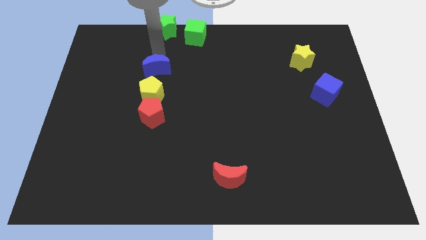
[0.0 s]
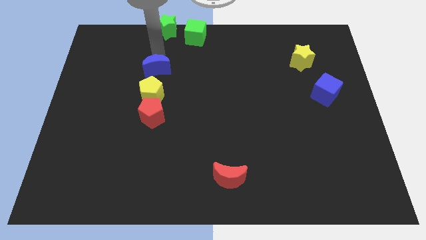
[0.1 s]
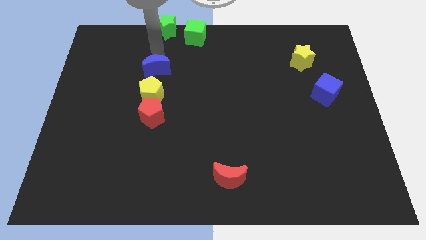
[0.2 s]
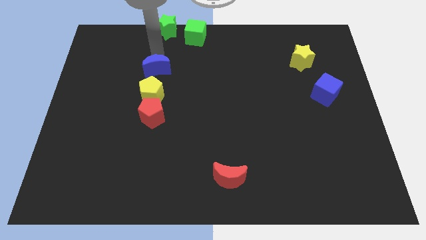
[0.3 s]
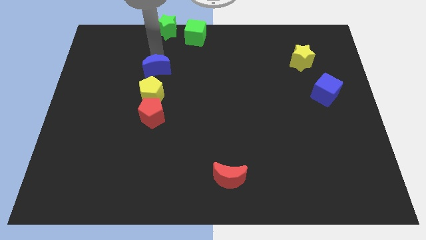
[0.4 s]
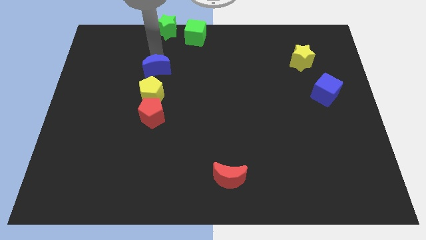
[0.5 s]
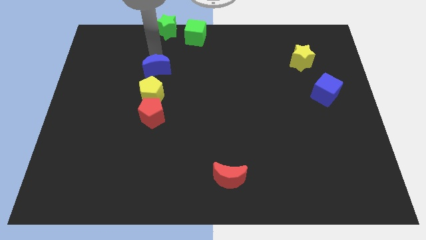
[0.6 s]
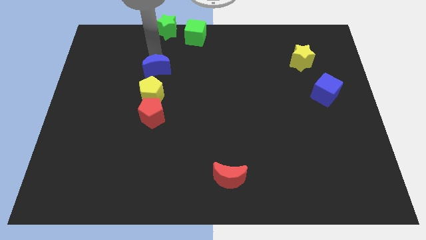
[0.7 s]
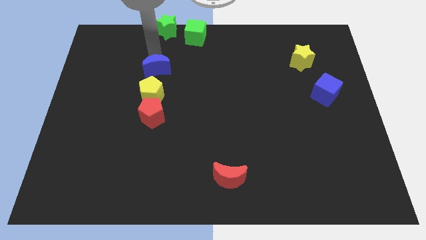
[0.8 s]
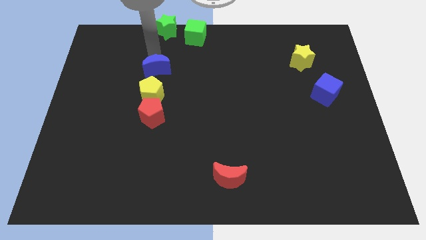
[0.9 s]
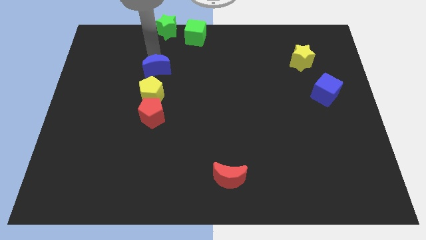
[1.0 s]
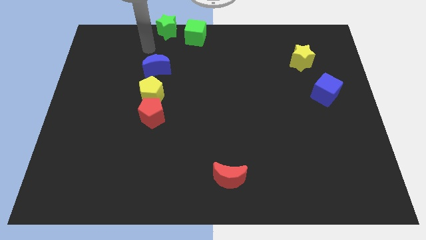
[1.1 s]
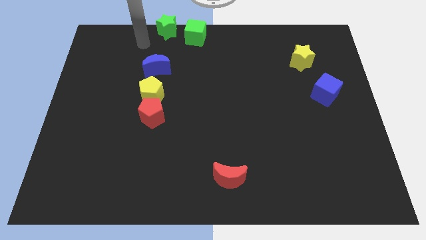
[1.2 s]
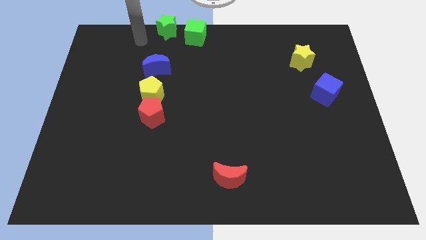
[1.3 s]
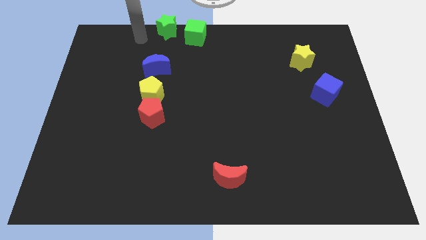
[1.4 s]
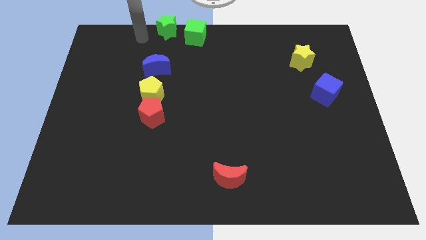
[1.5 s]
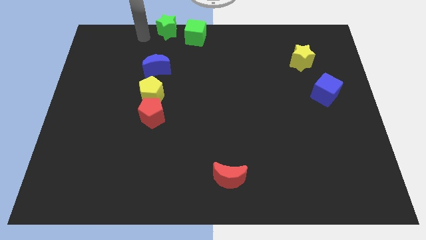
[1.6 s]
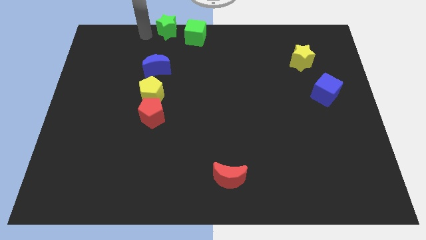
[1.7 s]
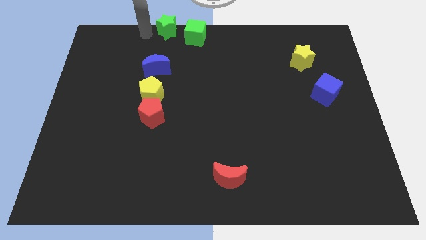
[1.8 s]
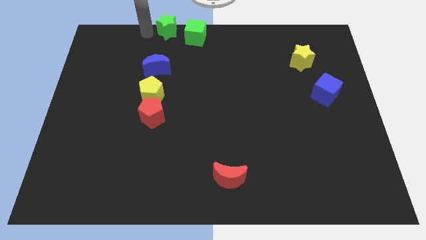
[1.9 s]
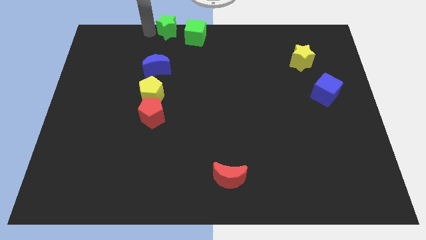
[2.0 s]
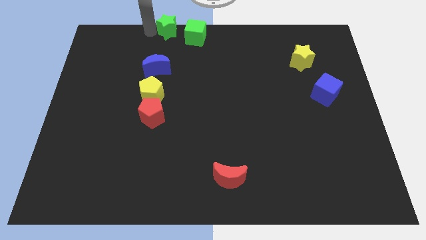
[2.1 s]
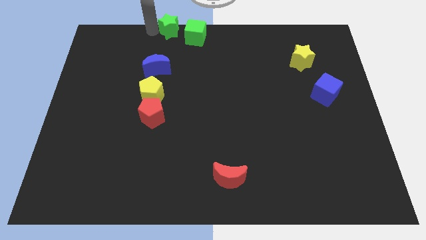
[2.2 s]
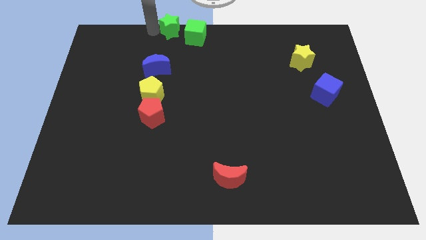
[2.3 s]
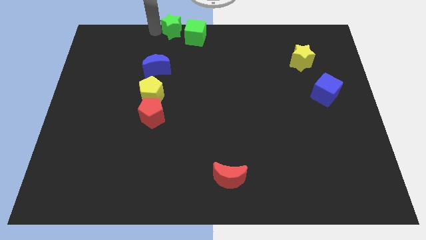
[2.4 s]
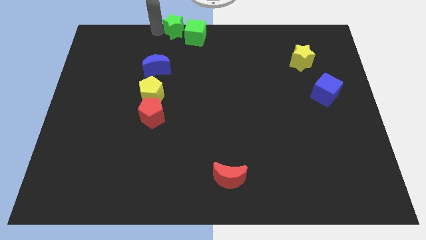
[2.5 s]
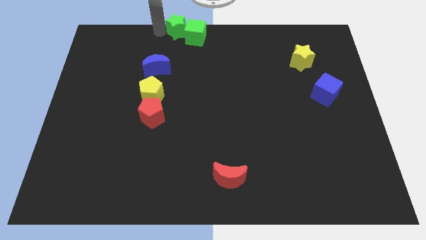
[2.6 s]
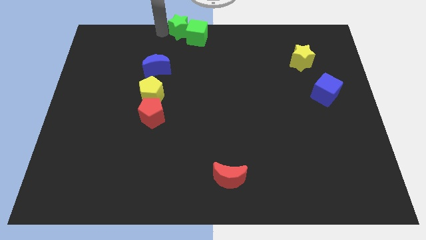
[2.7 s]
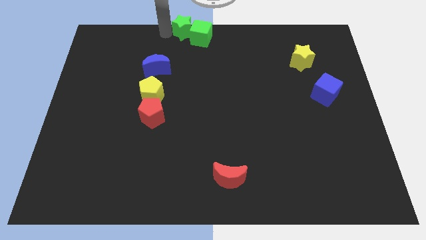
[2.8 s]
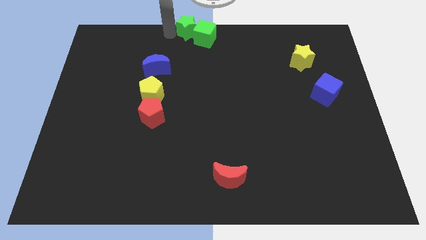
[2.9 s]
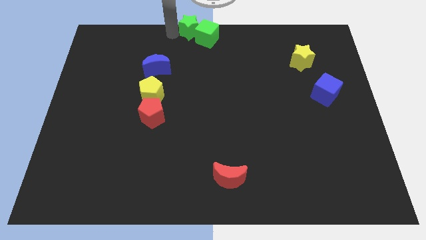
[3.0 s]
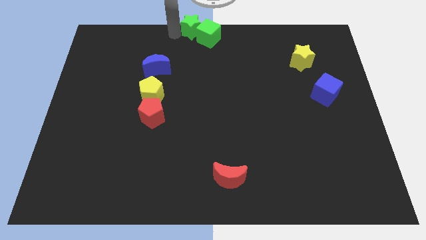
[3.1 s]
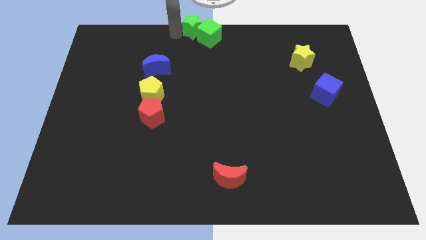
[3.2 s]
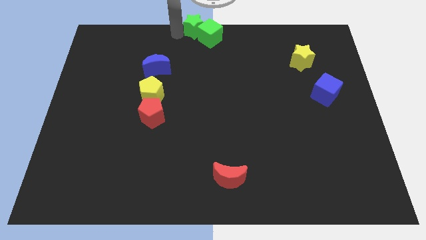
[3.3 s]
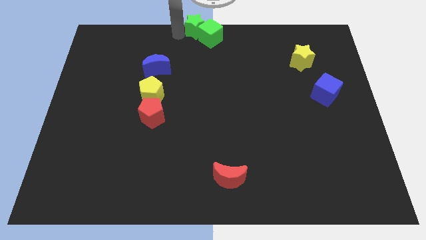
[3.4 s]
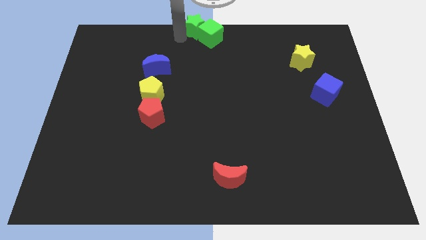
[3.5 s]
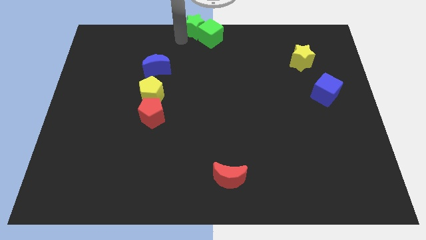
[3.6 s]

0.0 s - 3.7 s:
move the green blocks to the top center of the board

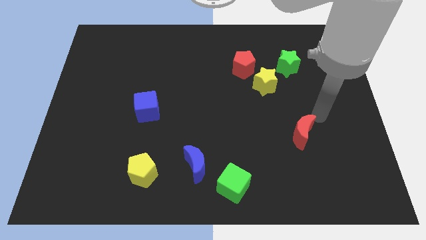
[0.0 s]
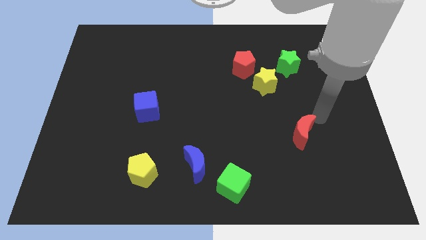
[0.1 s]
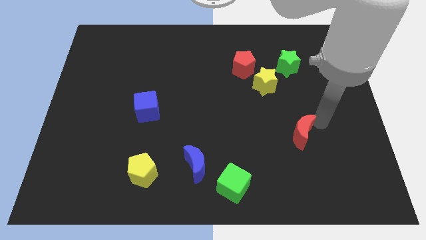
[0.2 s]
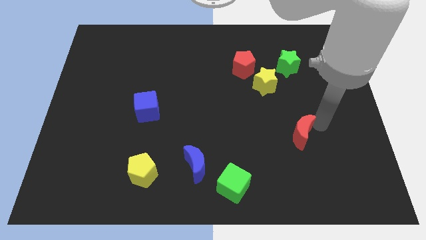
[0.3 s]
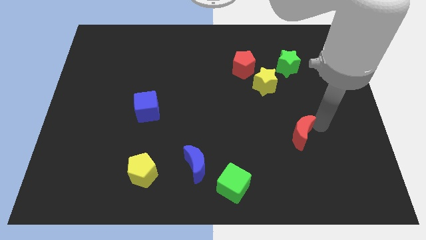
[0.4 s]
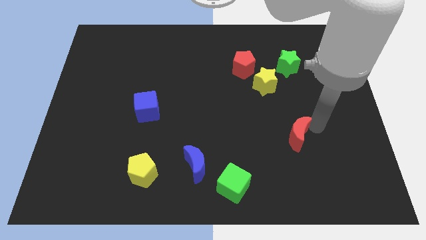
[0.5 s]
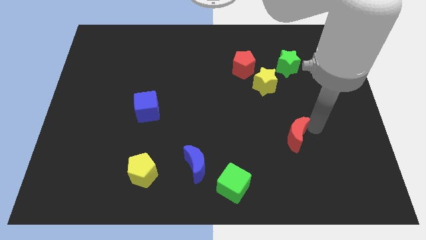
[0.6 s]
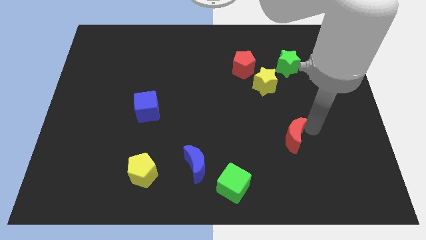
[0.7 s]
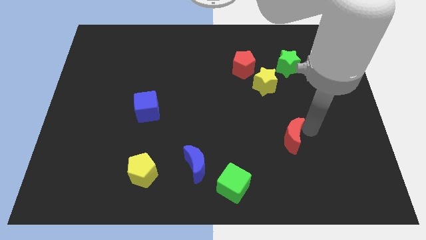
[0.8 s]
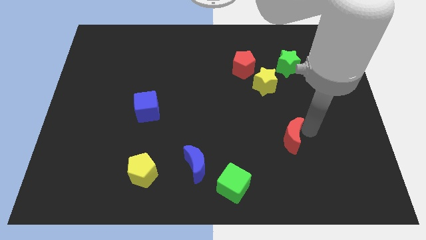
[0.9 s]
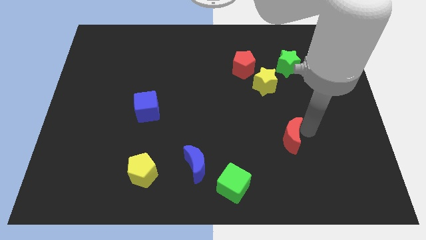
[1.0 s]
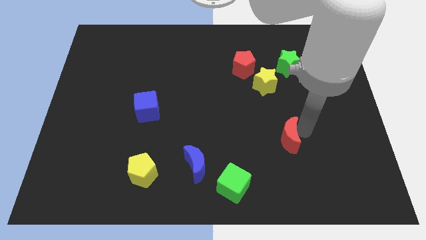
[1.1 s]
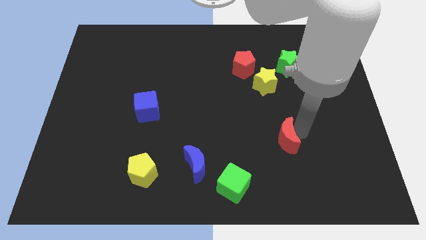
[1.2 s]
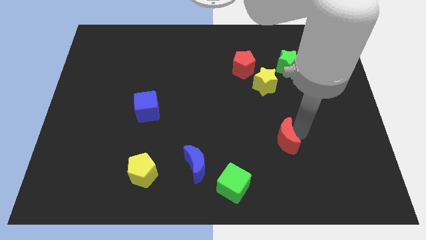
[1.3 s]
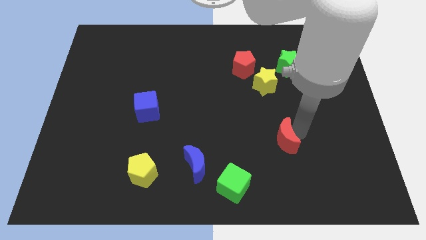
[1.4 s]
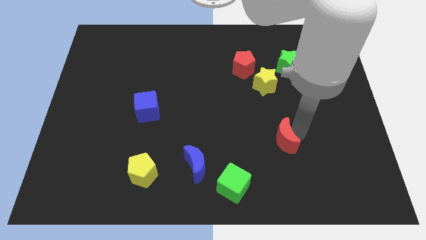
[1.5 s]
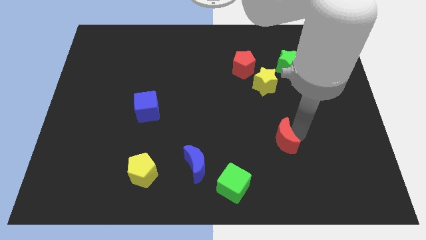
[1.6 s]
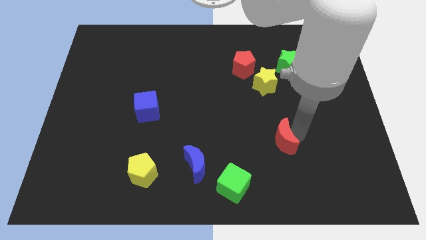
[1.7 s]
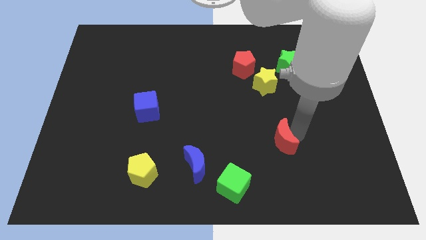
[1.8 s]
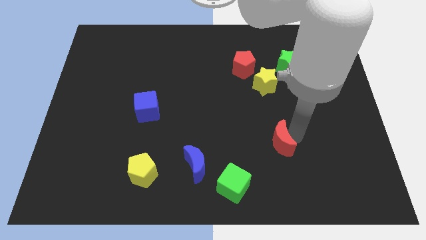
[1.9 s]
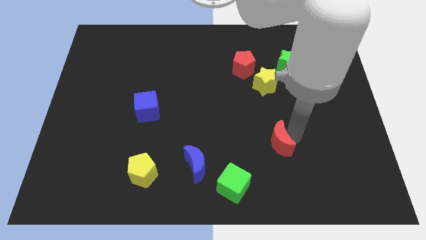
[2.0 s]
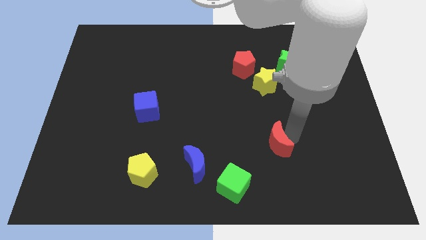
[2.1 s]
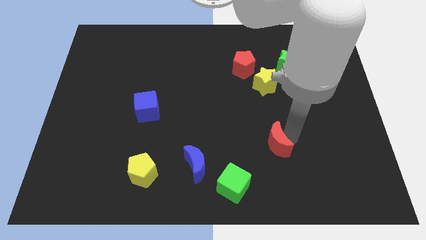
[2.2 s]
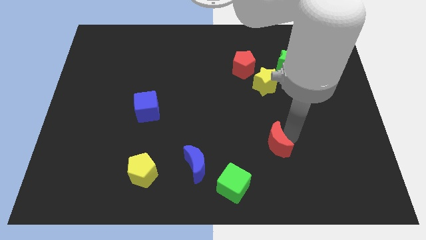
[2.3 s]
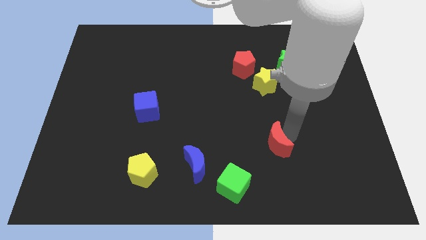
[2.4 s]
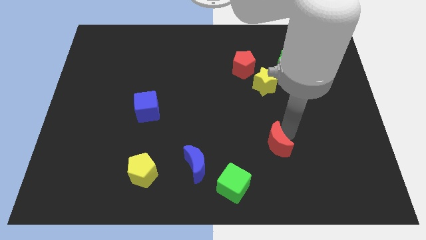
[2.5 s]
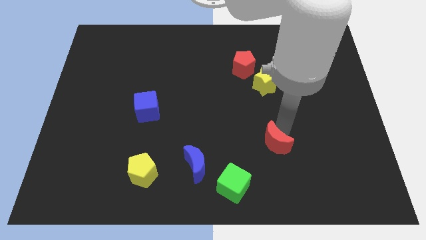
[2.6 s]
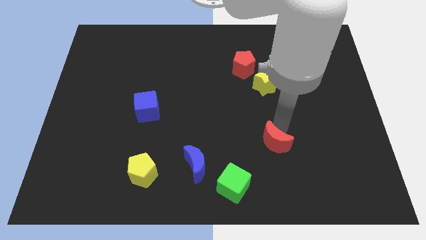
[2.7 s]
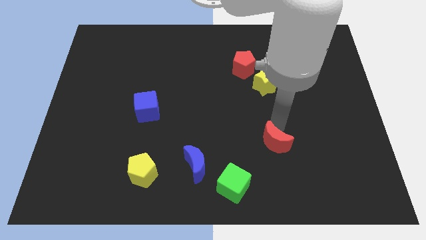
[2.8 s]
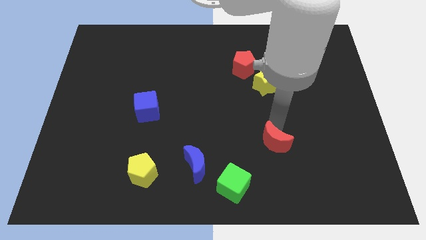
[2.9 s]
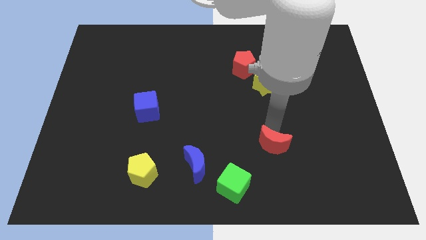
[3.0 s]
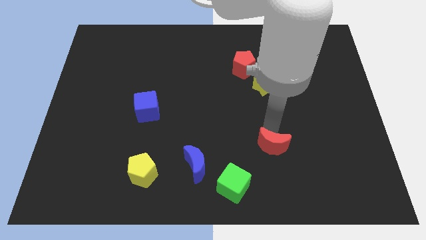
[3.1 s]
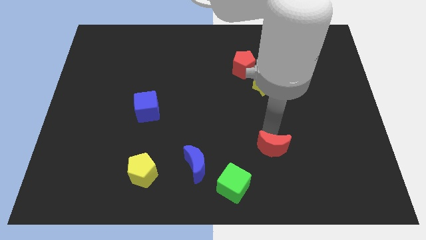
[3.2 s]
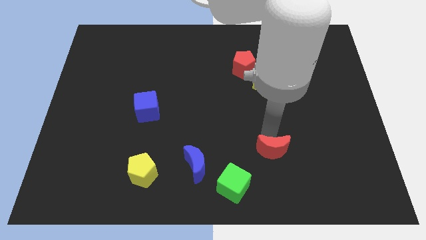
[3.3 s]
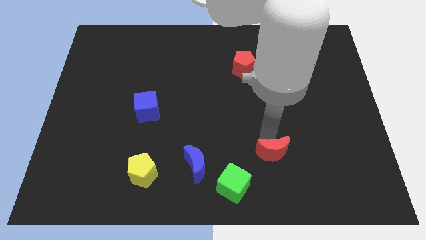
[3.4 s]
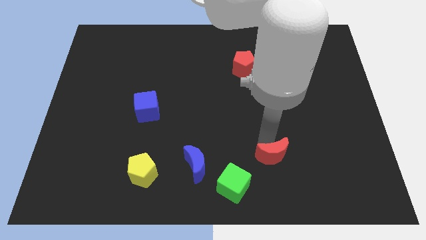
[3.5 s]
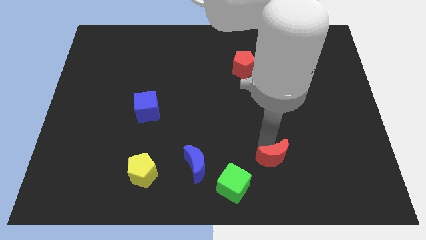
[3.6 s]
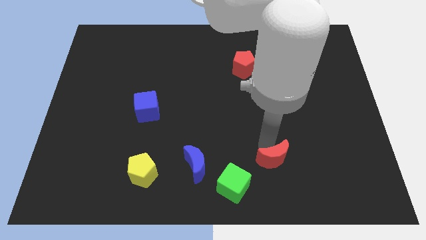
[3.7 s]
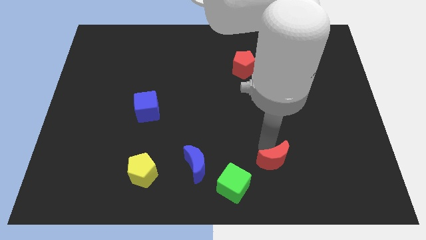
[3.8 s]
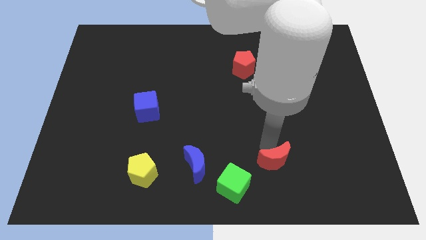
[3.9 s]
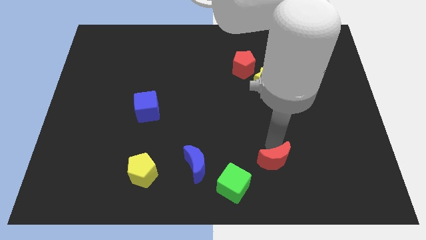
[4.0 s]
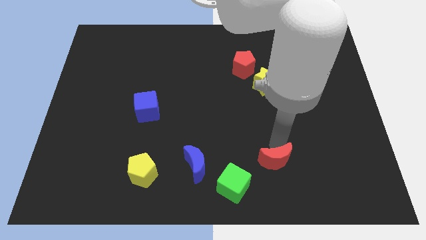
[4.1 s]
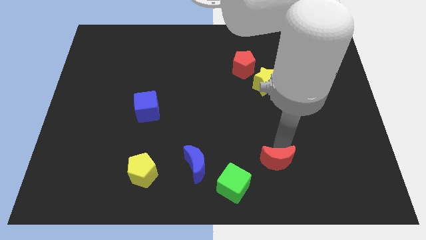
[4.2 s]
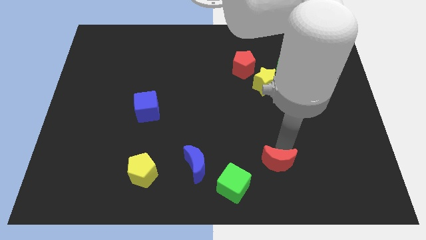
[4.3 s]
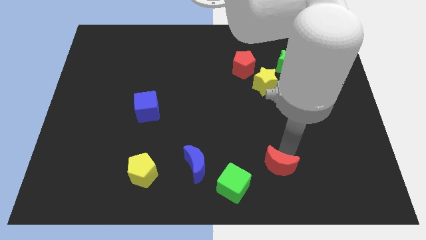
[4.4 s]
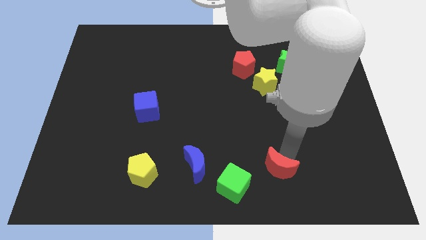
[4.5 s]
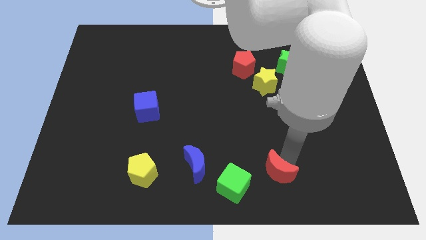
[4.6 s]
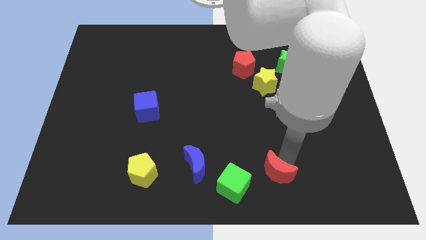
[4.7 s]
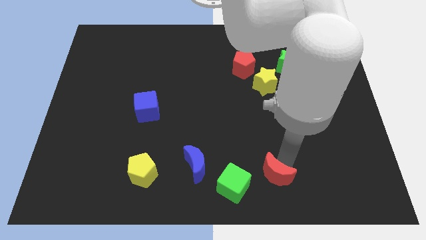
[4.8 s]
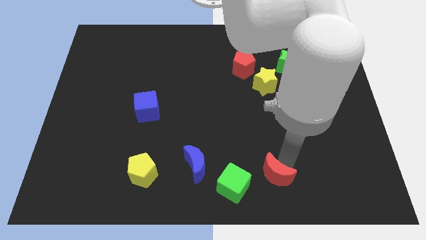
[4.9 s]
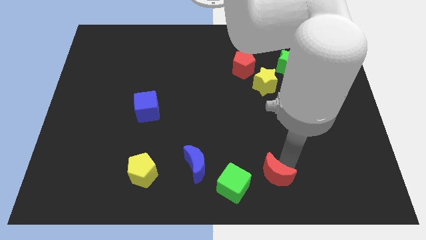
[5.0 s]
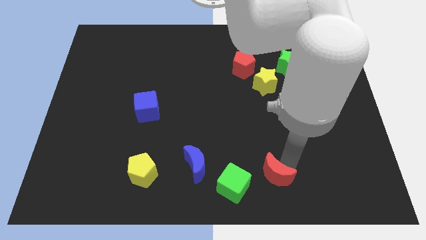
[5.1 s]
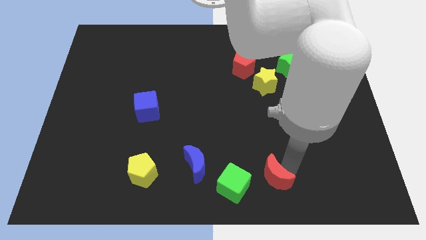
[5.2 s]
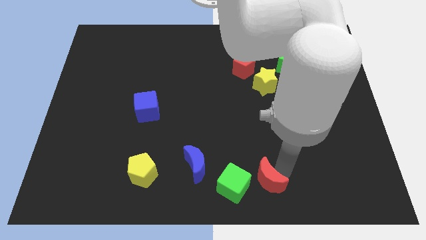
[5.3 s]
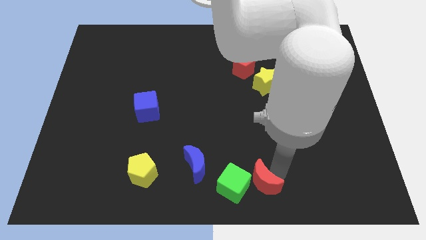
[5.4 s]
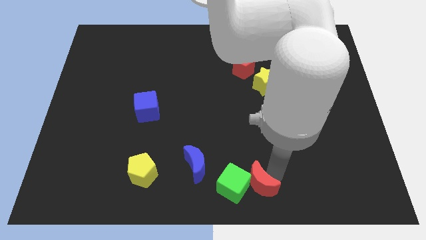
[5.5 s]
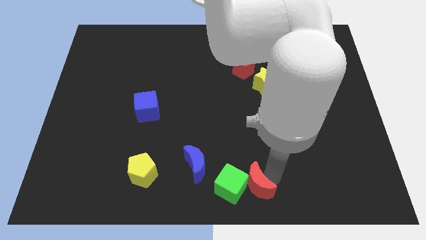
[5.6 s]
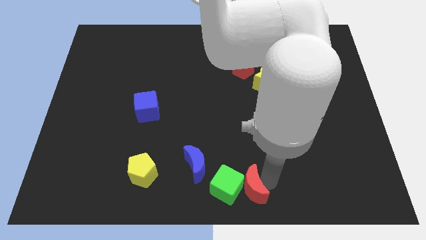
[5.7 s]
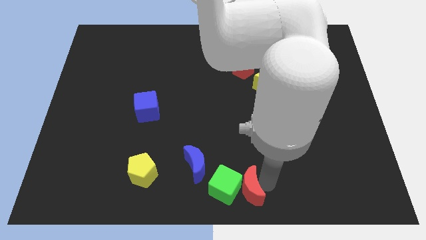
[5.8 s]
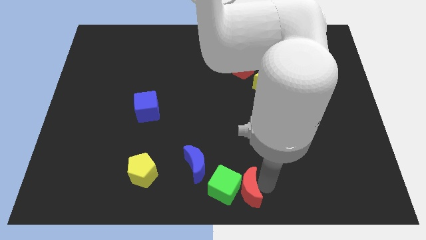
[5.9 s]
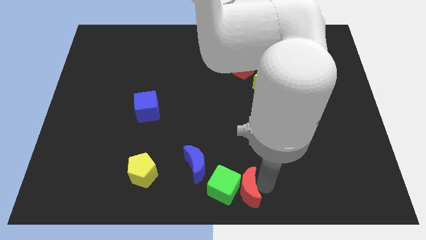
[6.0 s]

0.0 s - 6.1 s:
place red moon into green cube
